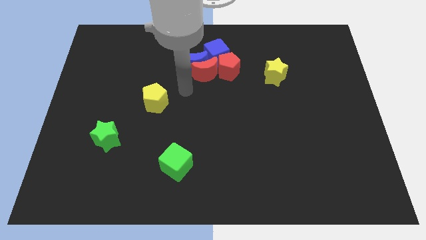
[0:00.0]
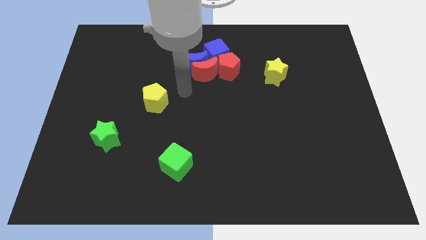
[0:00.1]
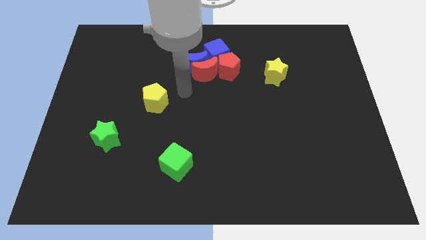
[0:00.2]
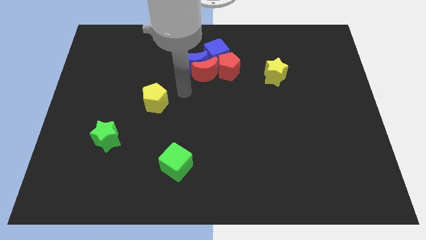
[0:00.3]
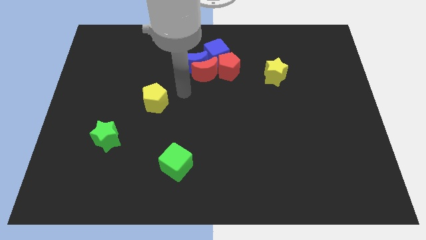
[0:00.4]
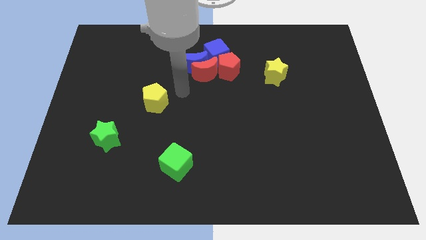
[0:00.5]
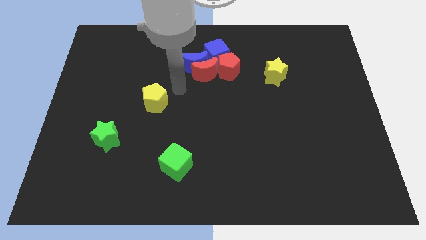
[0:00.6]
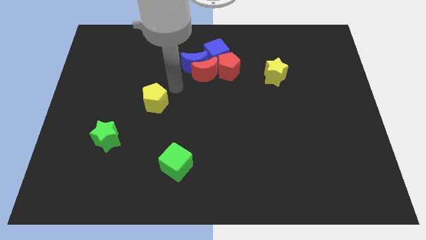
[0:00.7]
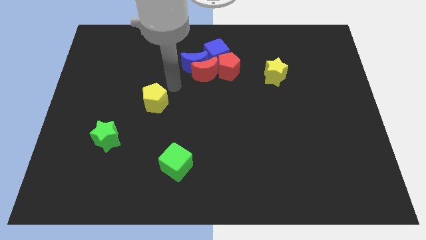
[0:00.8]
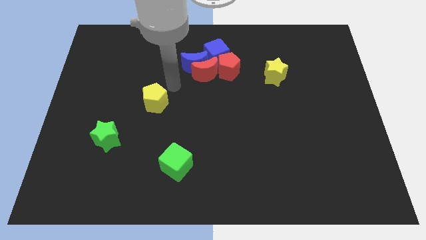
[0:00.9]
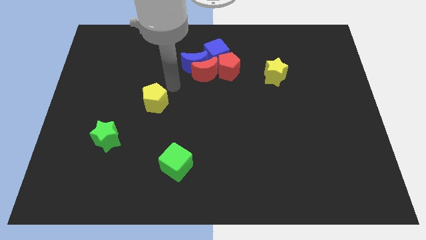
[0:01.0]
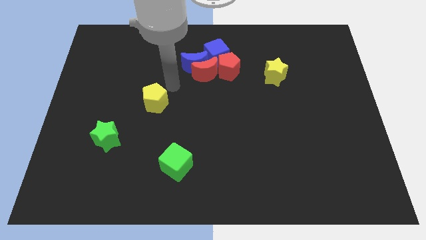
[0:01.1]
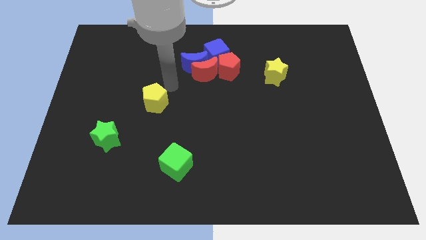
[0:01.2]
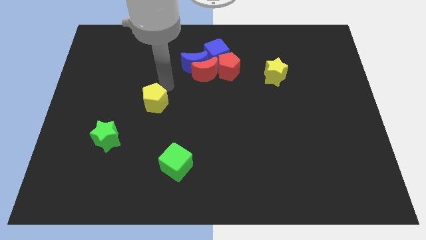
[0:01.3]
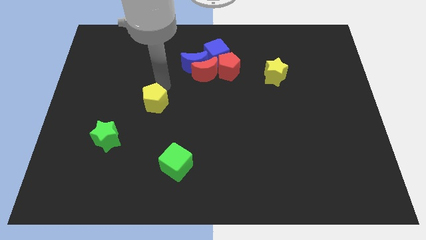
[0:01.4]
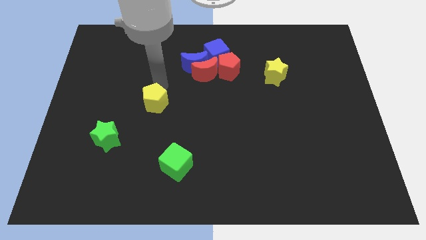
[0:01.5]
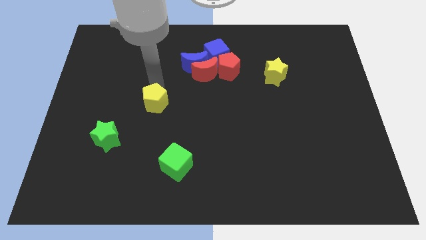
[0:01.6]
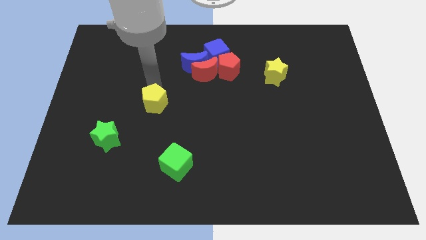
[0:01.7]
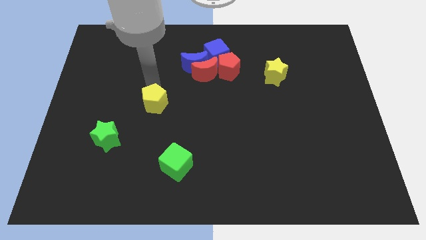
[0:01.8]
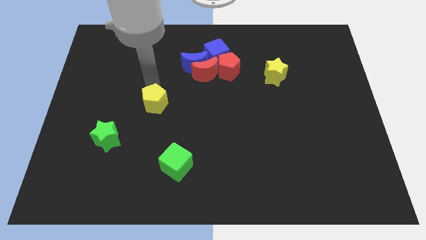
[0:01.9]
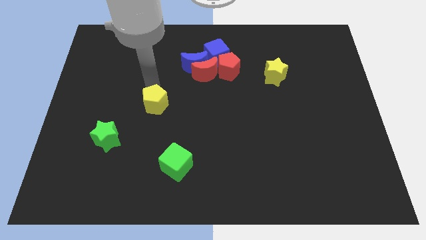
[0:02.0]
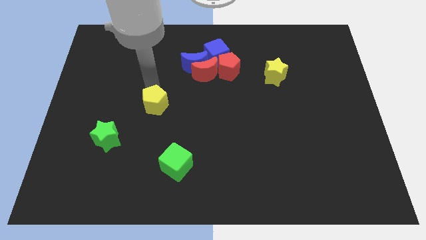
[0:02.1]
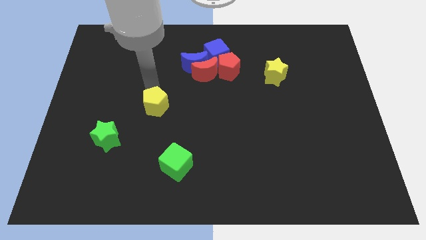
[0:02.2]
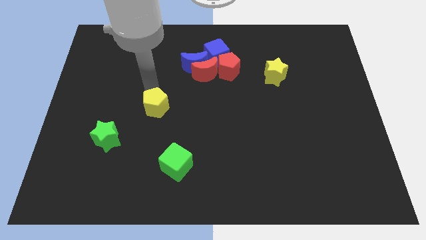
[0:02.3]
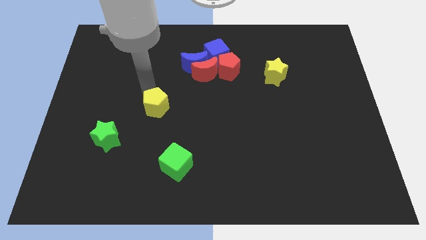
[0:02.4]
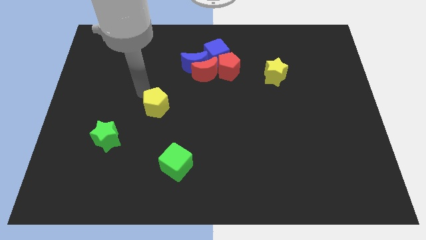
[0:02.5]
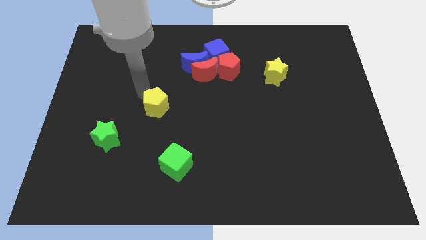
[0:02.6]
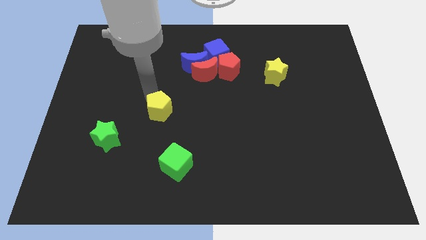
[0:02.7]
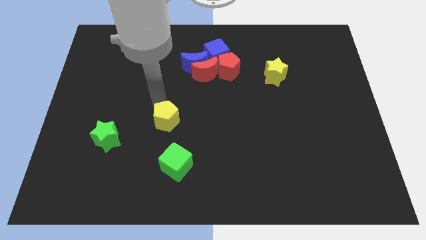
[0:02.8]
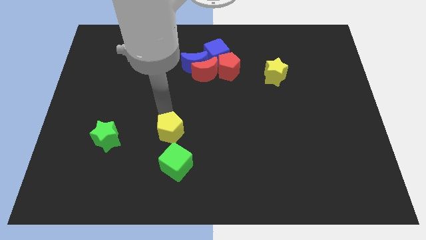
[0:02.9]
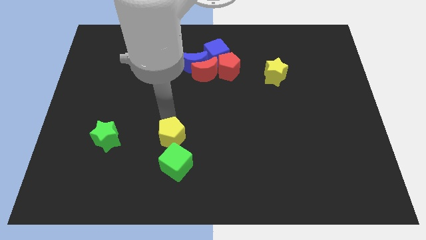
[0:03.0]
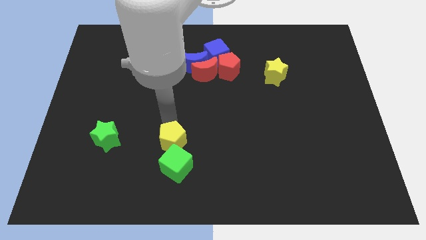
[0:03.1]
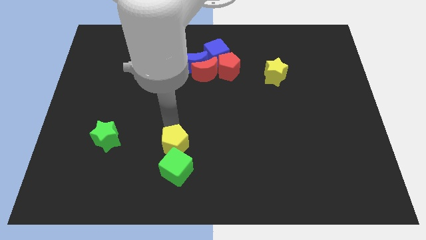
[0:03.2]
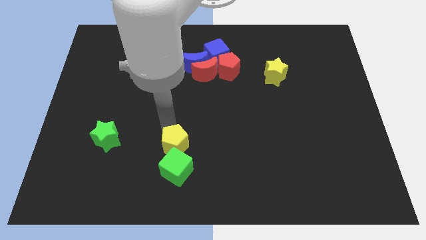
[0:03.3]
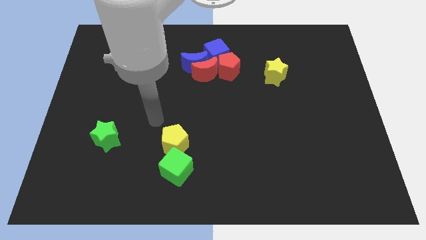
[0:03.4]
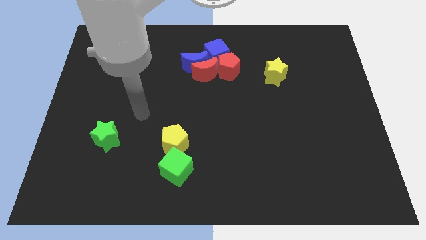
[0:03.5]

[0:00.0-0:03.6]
move the yellow pentagon into the green cube

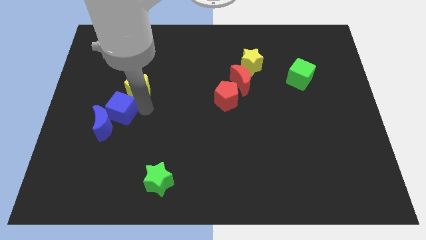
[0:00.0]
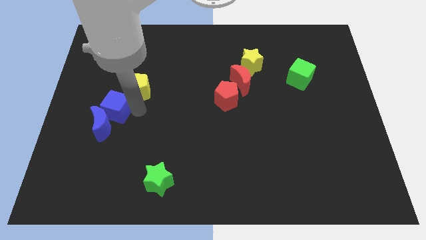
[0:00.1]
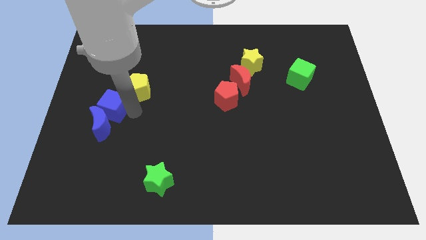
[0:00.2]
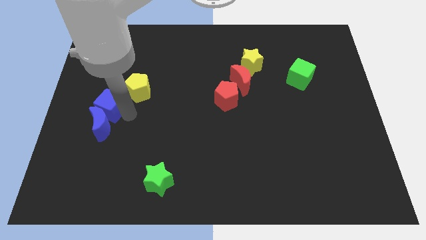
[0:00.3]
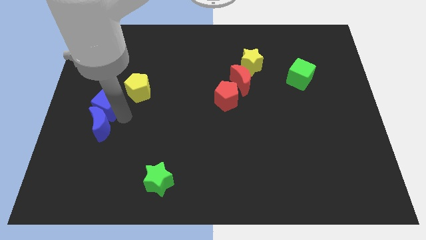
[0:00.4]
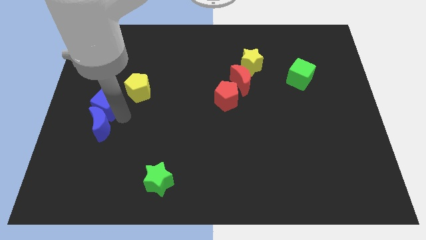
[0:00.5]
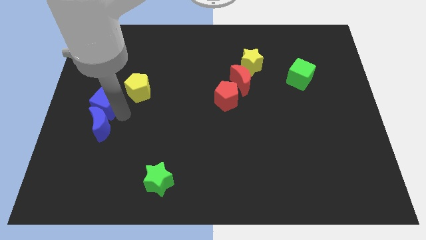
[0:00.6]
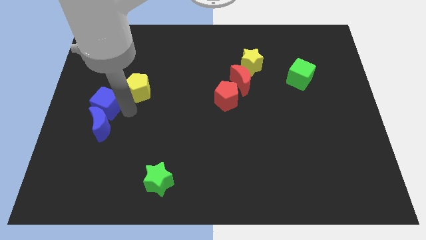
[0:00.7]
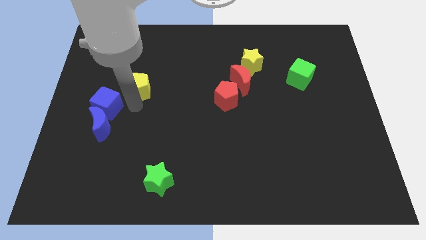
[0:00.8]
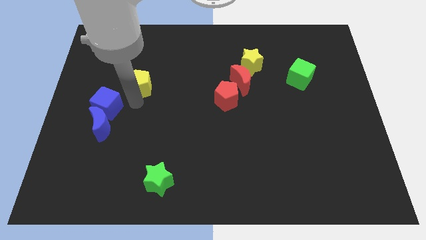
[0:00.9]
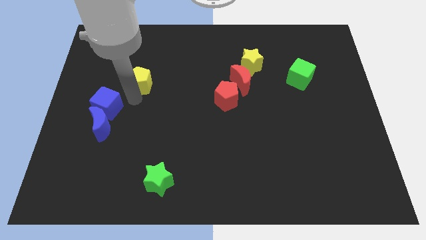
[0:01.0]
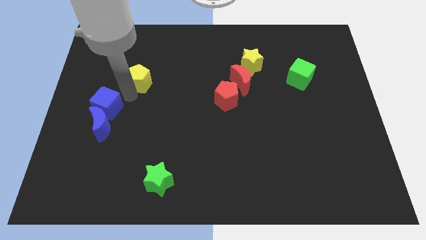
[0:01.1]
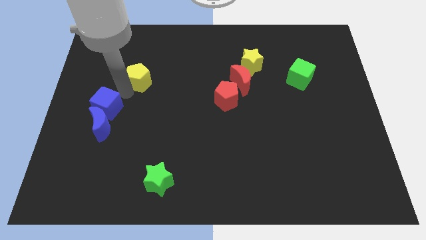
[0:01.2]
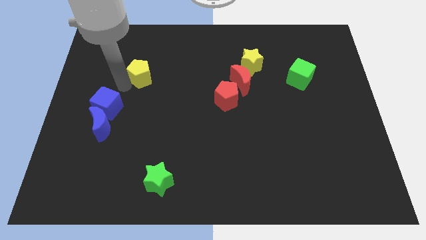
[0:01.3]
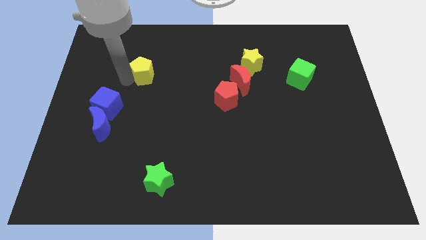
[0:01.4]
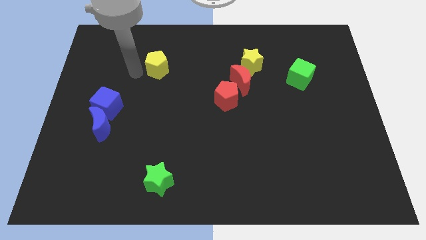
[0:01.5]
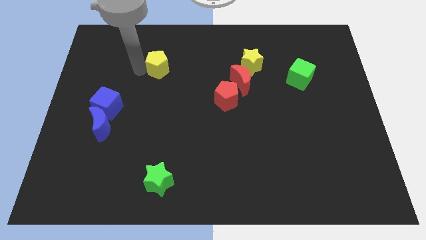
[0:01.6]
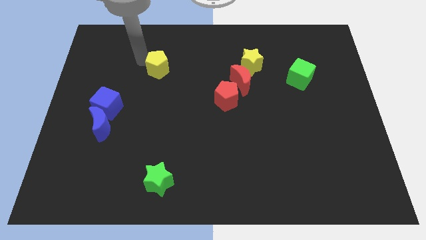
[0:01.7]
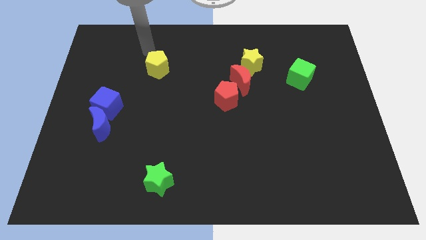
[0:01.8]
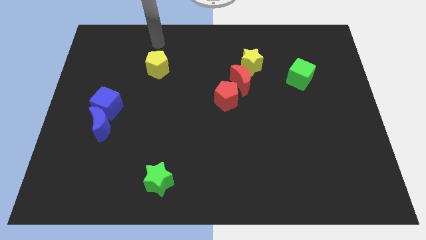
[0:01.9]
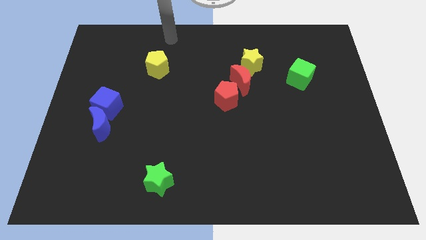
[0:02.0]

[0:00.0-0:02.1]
push yellow pentagon up to left of yellow star

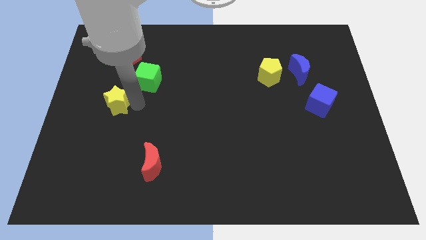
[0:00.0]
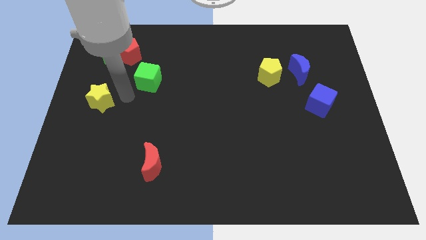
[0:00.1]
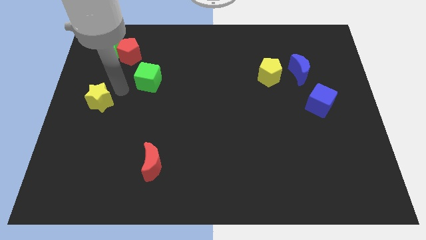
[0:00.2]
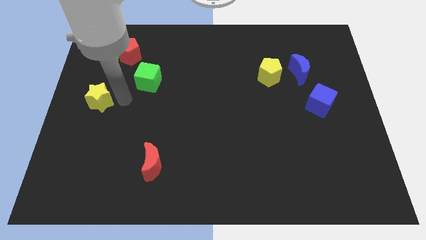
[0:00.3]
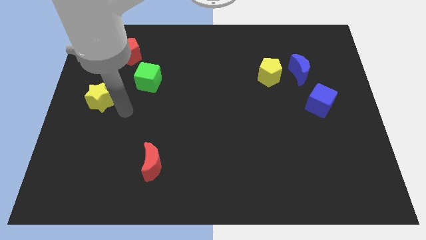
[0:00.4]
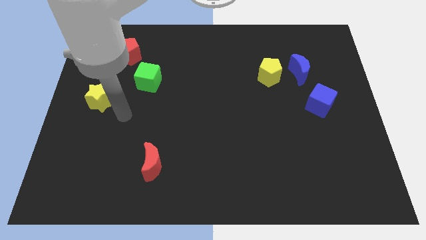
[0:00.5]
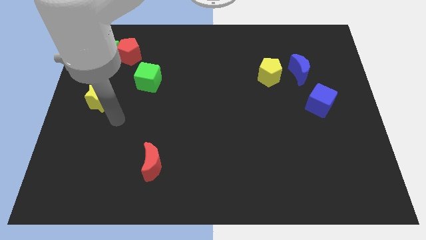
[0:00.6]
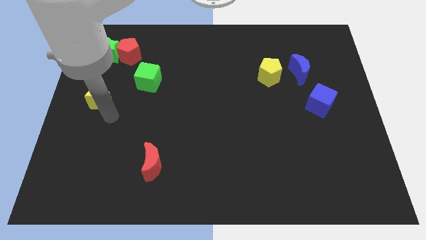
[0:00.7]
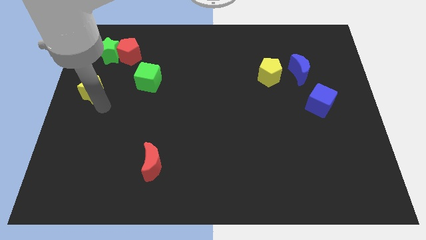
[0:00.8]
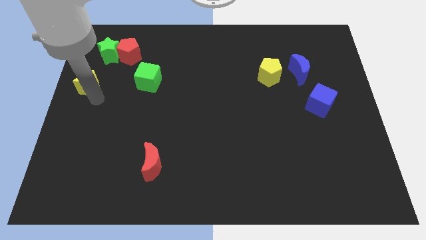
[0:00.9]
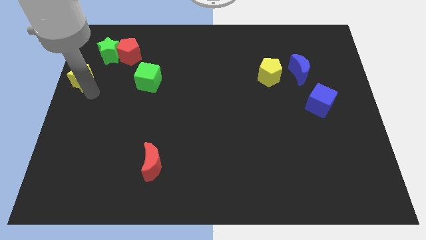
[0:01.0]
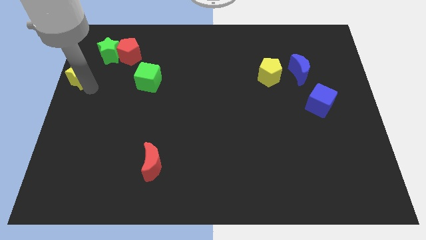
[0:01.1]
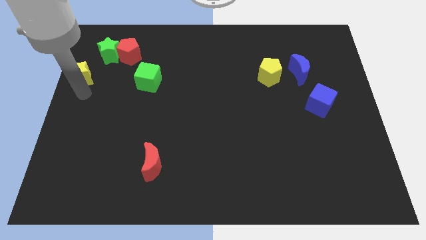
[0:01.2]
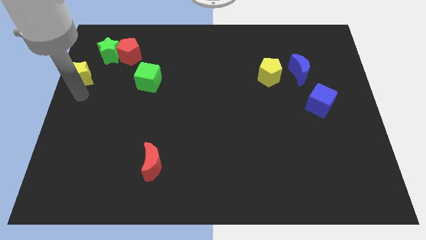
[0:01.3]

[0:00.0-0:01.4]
put the yellow star at the bottom left side of the green star

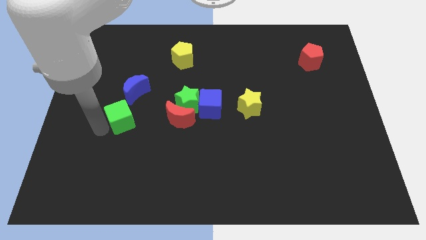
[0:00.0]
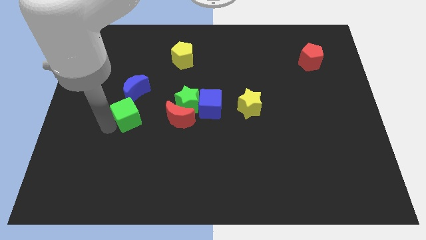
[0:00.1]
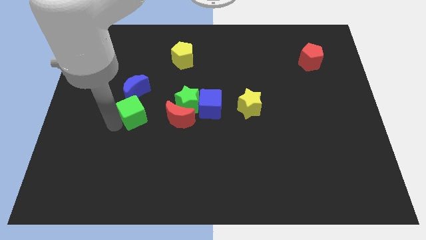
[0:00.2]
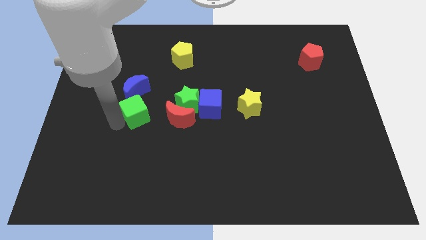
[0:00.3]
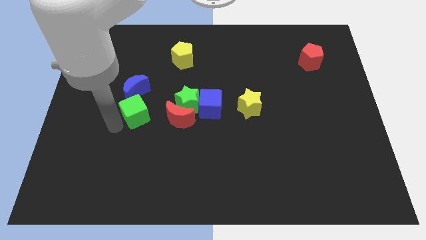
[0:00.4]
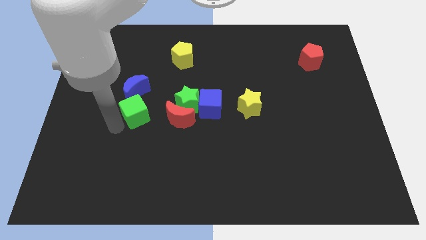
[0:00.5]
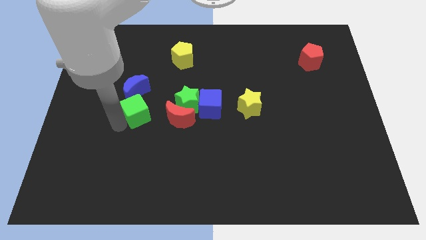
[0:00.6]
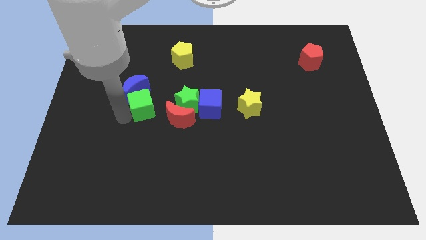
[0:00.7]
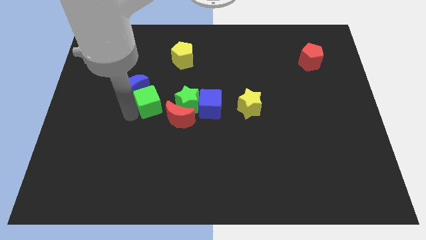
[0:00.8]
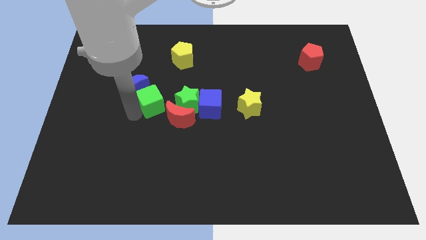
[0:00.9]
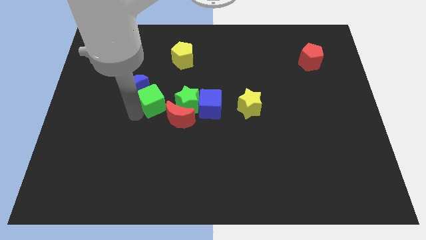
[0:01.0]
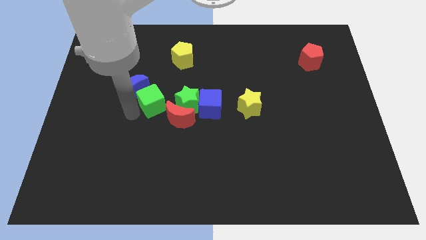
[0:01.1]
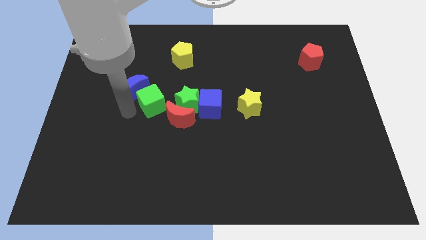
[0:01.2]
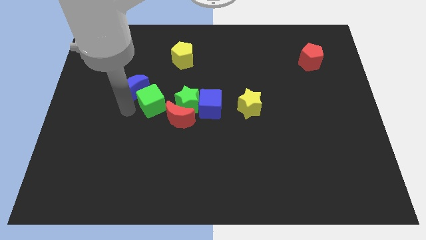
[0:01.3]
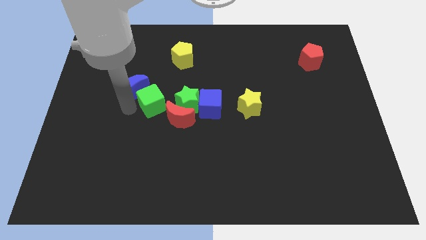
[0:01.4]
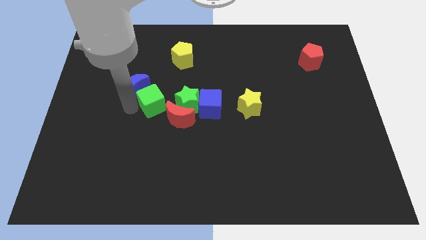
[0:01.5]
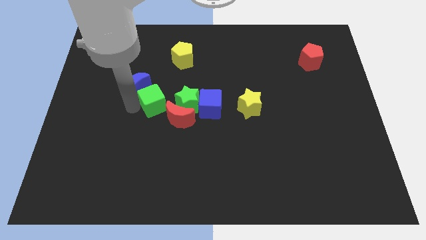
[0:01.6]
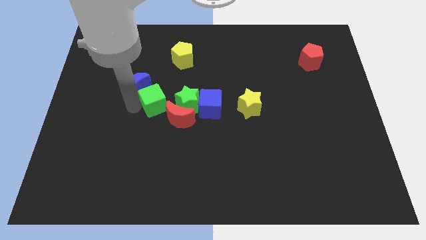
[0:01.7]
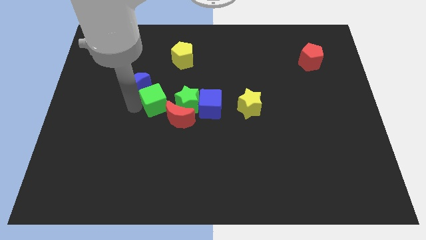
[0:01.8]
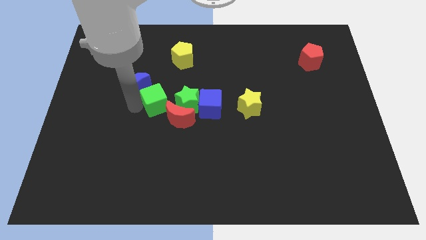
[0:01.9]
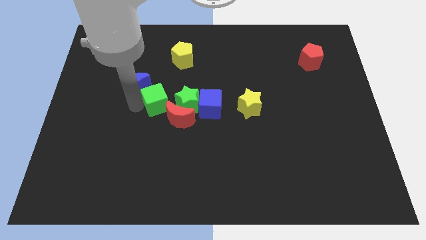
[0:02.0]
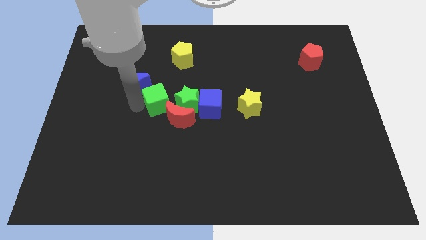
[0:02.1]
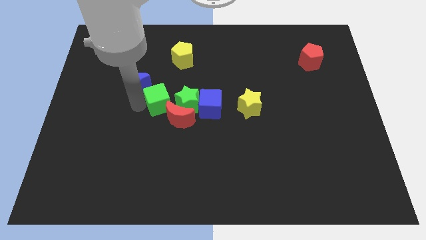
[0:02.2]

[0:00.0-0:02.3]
push the green cube to the left of the green star
